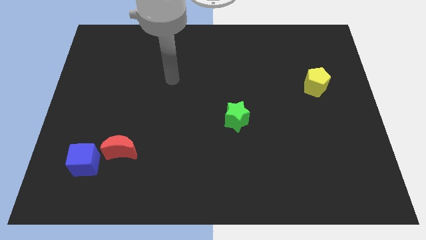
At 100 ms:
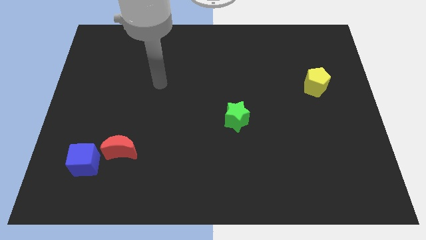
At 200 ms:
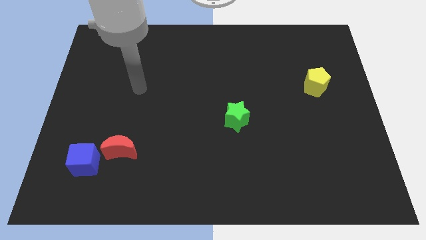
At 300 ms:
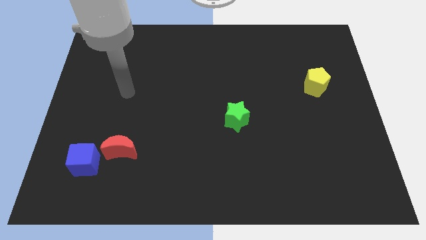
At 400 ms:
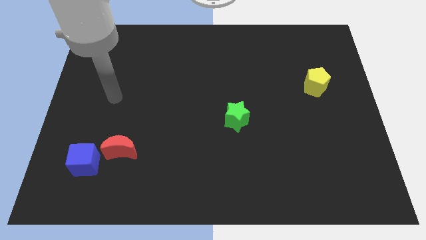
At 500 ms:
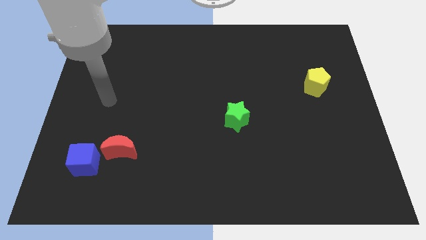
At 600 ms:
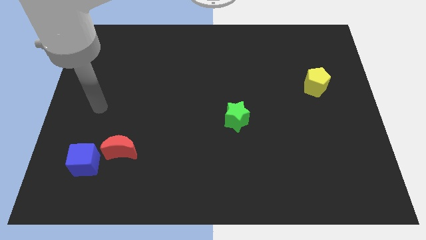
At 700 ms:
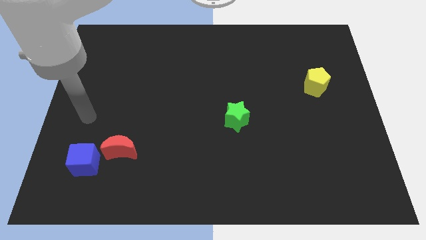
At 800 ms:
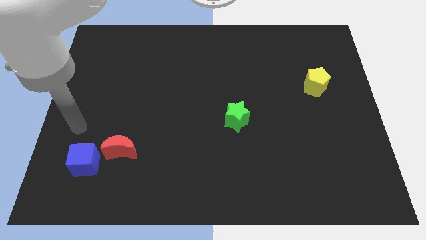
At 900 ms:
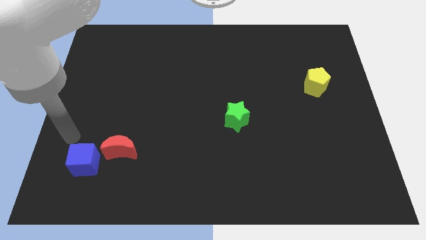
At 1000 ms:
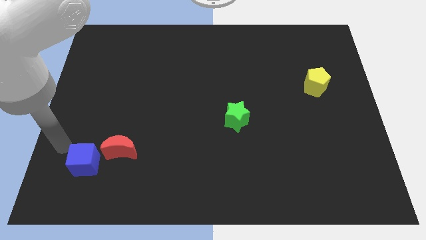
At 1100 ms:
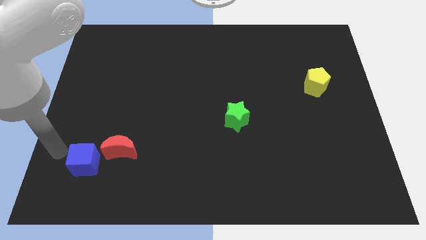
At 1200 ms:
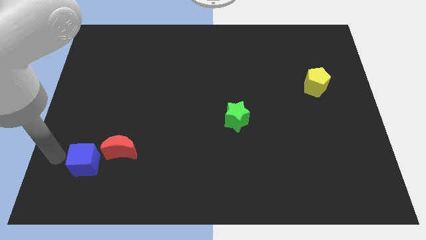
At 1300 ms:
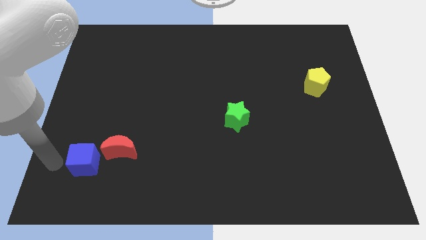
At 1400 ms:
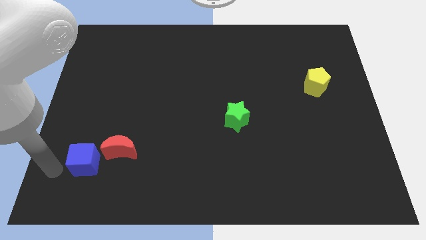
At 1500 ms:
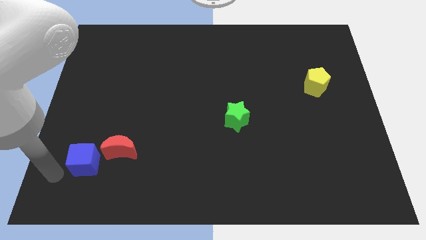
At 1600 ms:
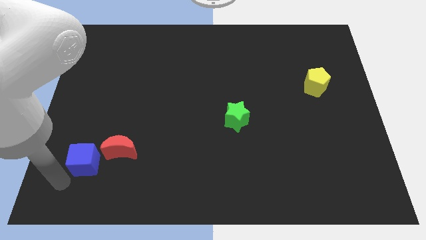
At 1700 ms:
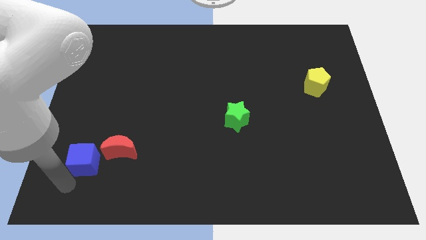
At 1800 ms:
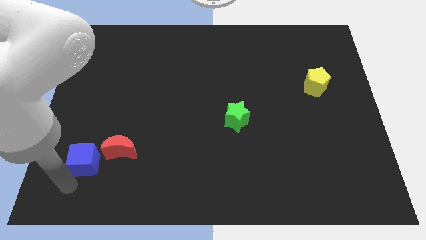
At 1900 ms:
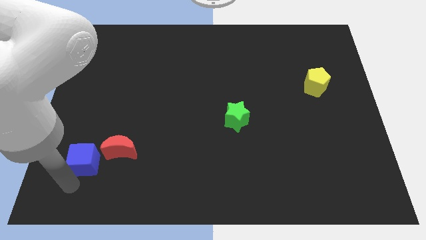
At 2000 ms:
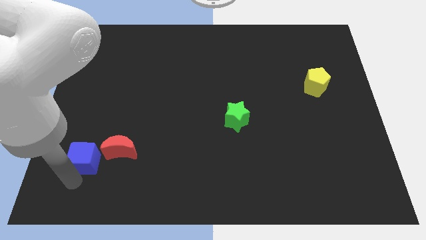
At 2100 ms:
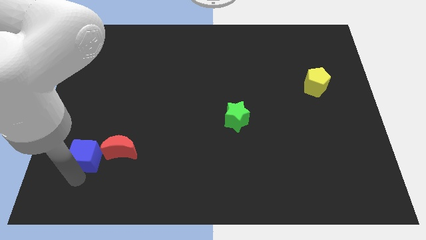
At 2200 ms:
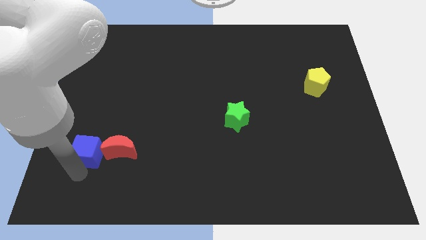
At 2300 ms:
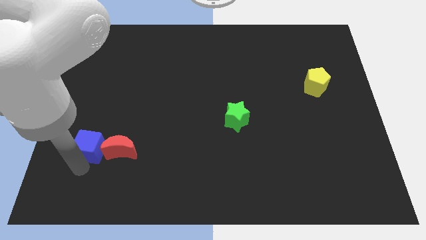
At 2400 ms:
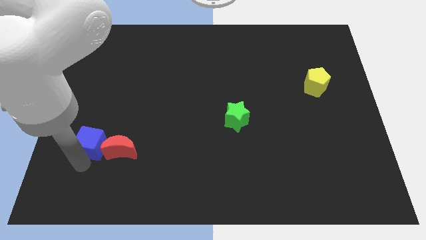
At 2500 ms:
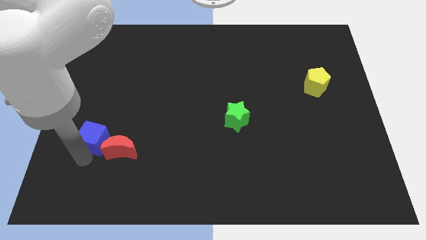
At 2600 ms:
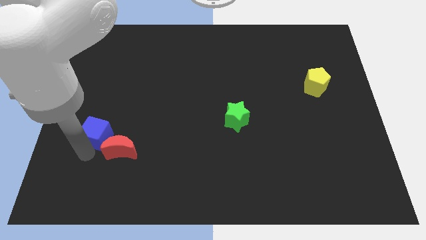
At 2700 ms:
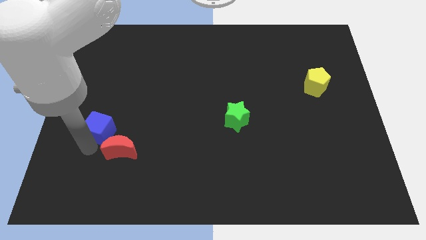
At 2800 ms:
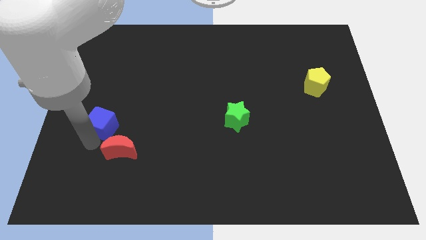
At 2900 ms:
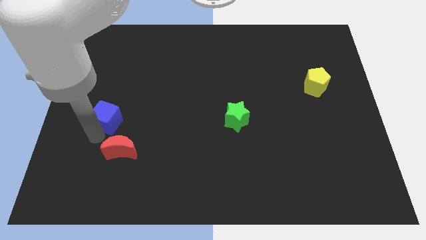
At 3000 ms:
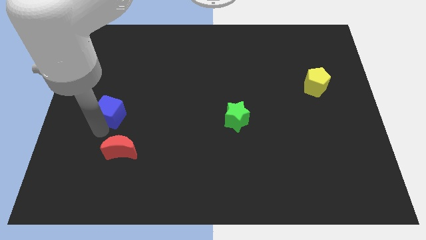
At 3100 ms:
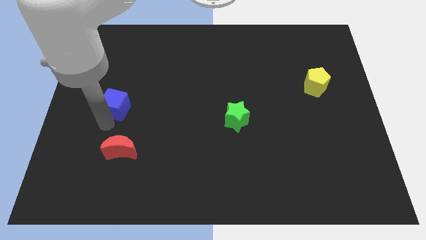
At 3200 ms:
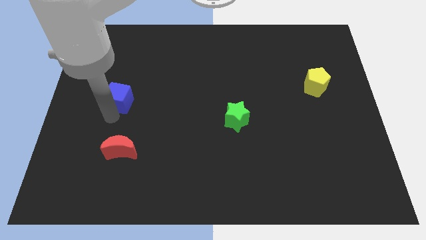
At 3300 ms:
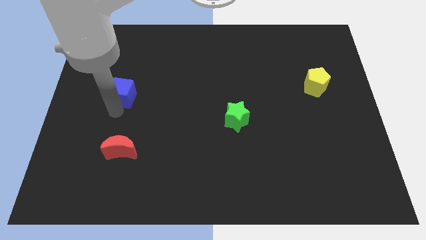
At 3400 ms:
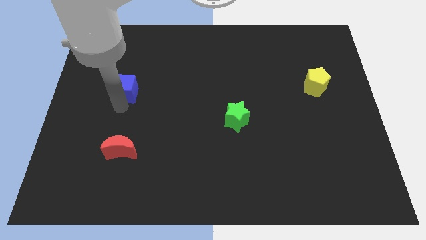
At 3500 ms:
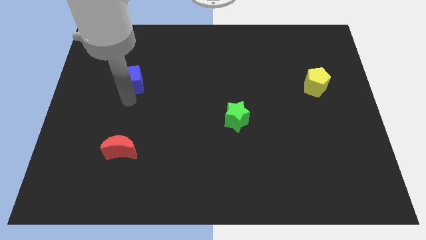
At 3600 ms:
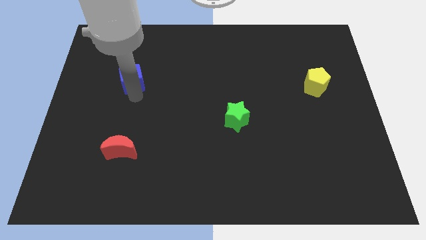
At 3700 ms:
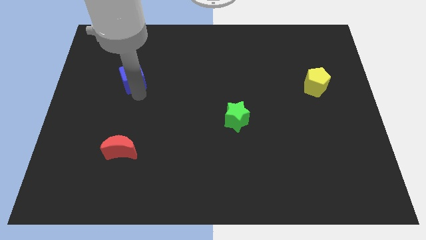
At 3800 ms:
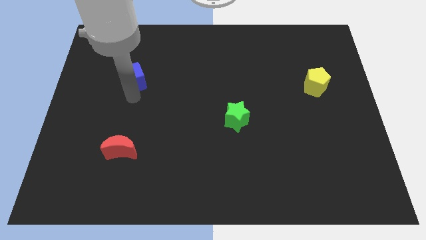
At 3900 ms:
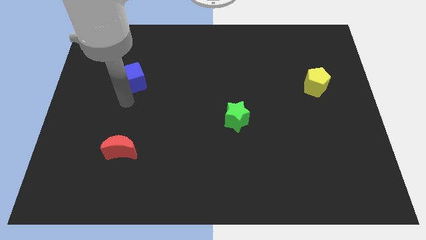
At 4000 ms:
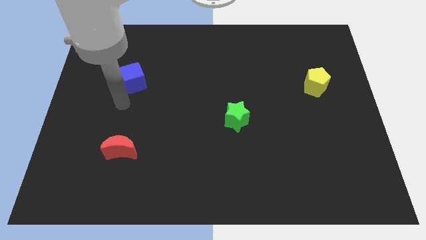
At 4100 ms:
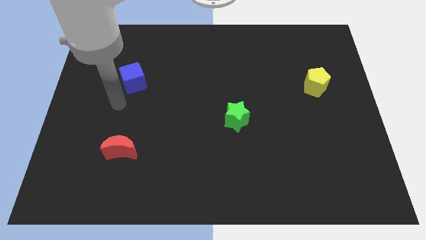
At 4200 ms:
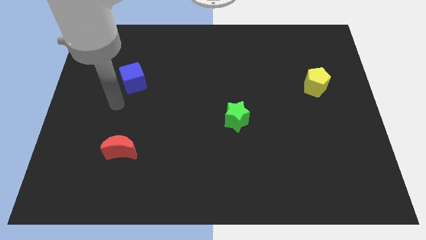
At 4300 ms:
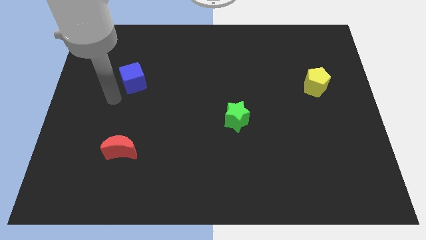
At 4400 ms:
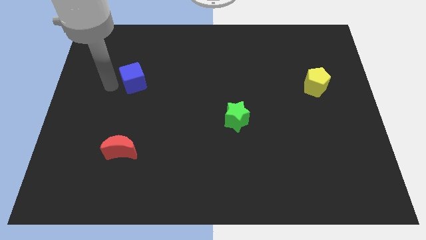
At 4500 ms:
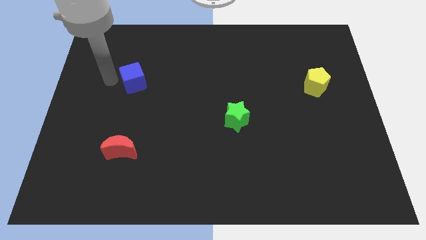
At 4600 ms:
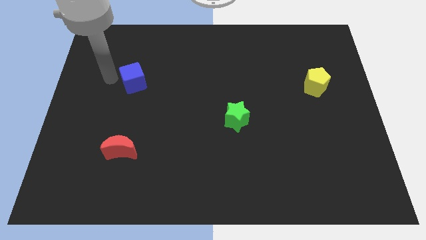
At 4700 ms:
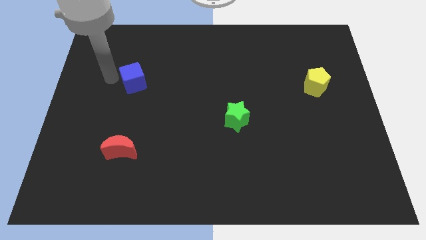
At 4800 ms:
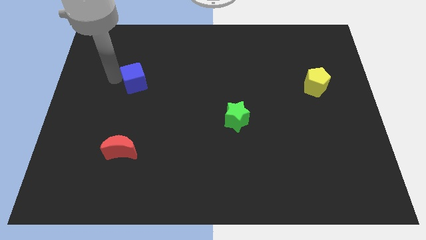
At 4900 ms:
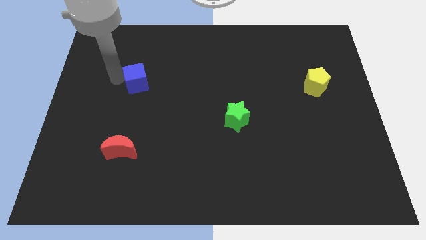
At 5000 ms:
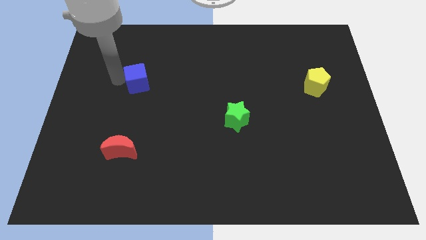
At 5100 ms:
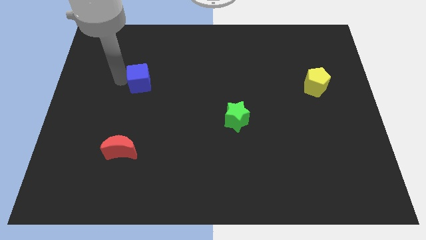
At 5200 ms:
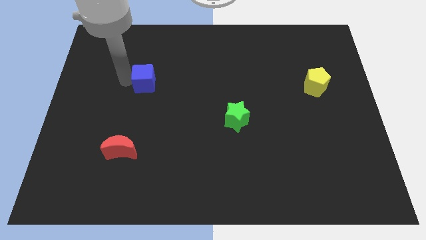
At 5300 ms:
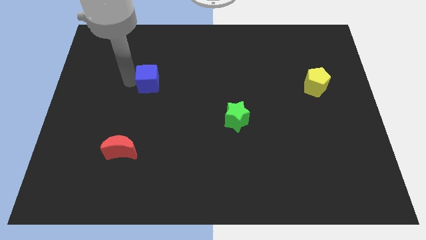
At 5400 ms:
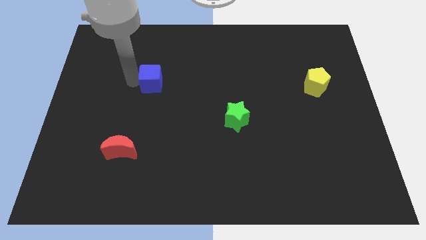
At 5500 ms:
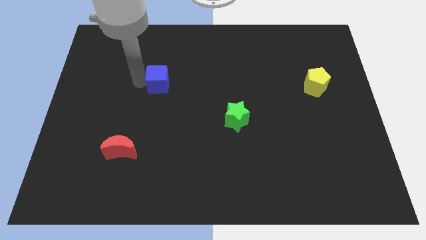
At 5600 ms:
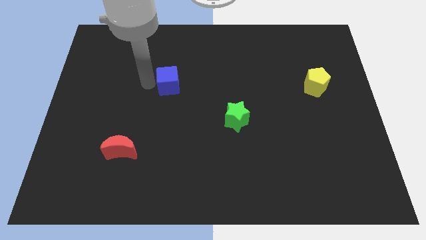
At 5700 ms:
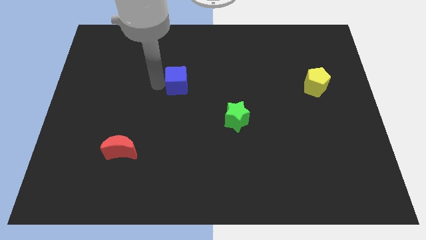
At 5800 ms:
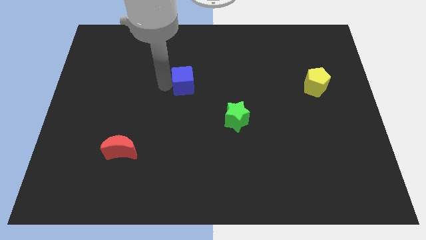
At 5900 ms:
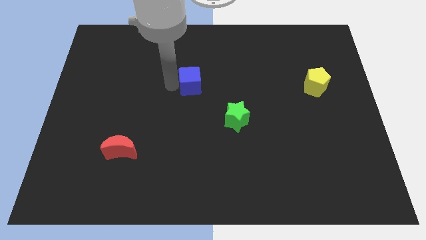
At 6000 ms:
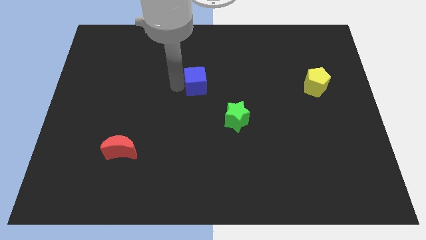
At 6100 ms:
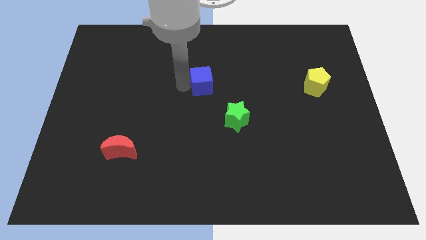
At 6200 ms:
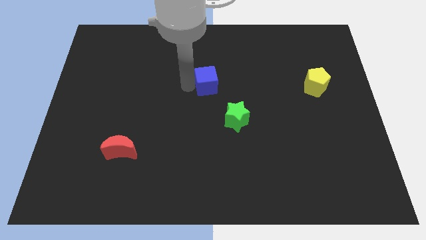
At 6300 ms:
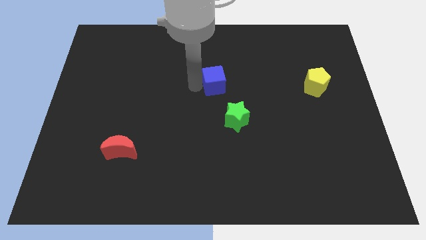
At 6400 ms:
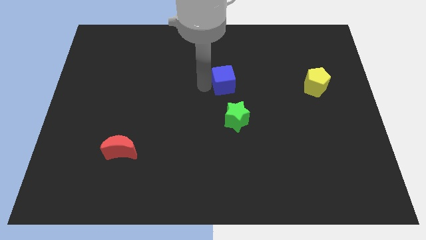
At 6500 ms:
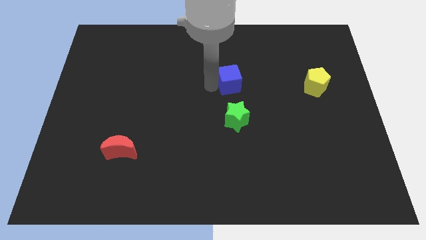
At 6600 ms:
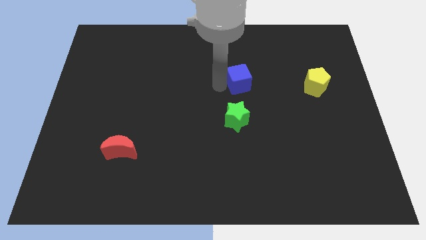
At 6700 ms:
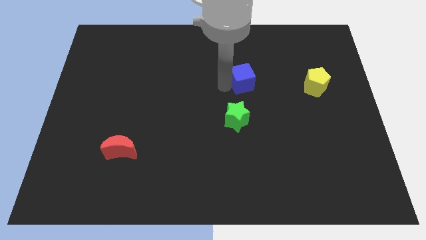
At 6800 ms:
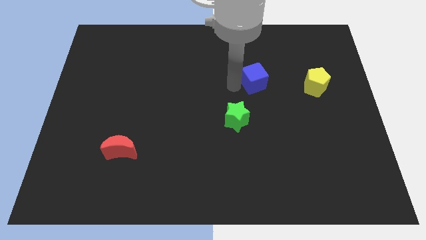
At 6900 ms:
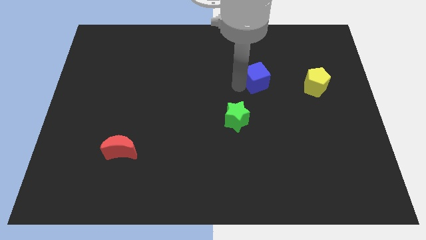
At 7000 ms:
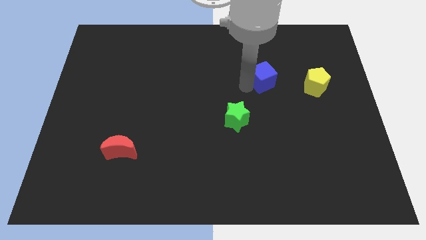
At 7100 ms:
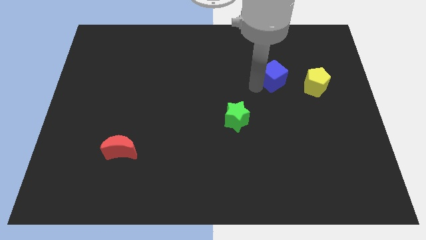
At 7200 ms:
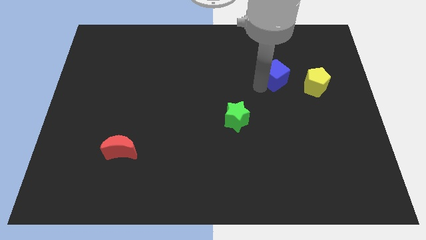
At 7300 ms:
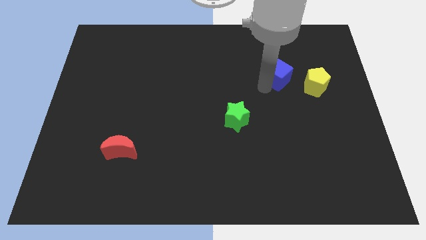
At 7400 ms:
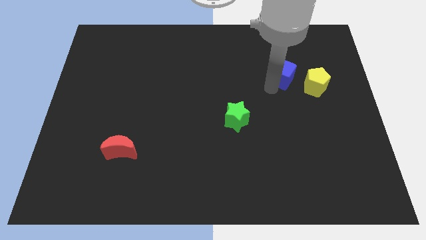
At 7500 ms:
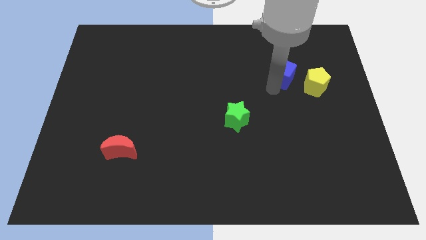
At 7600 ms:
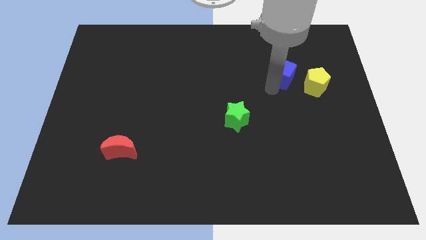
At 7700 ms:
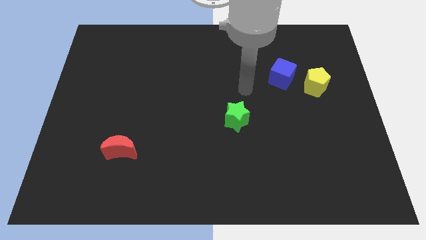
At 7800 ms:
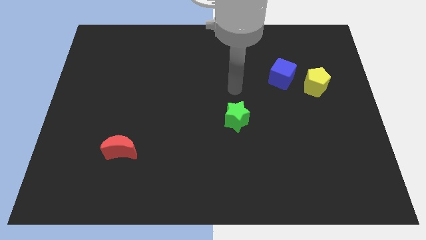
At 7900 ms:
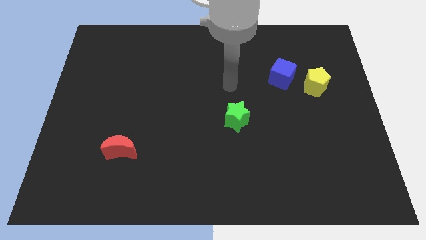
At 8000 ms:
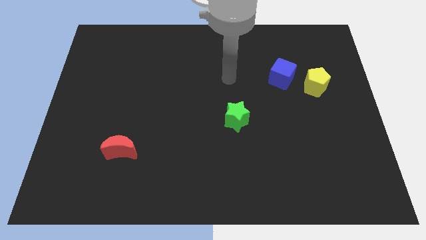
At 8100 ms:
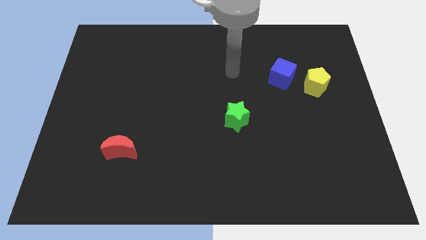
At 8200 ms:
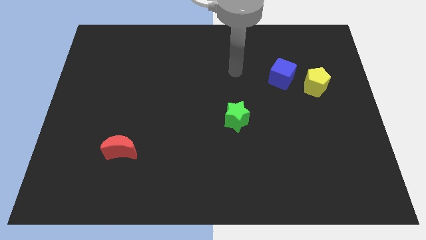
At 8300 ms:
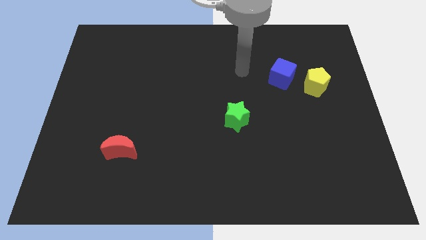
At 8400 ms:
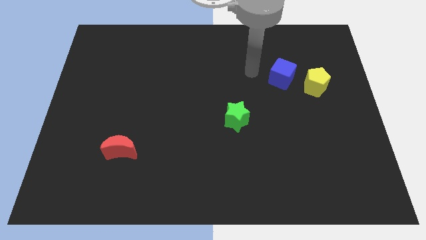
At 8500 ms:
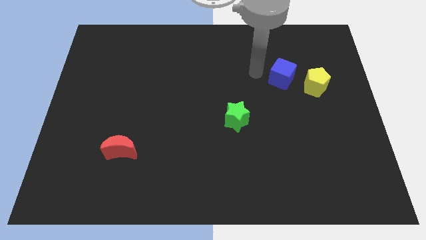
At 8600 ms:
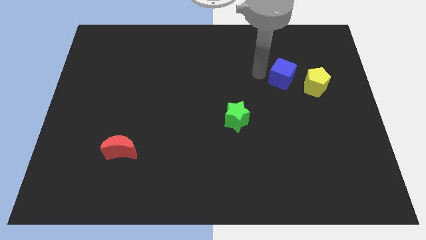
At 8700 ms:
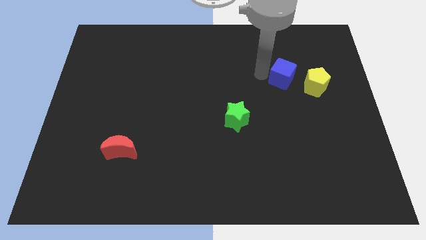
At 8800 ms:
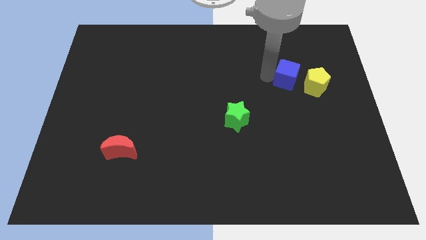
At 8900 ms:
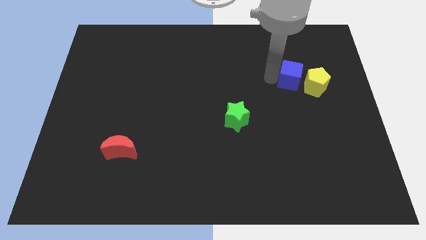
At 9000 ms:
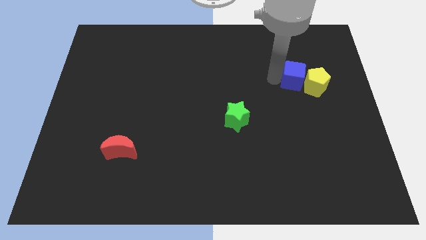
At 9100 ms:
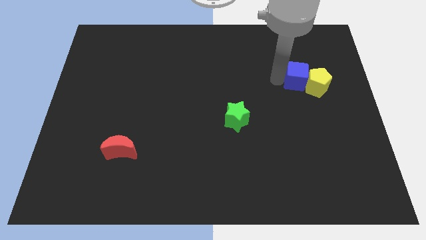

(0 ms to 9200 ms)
move the blue cube next to the yellow block
